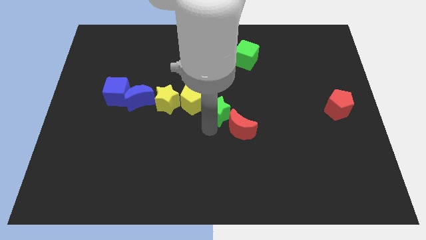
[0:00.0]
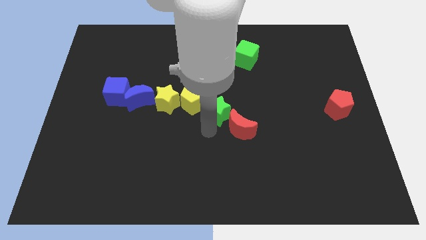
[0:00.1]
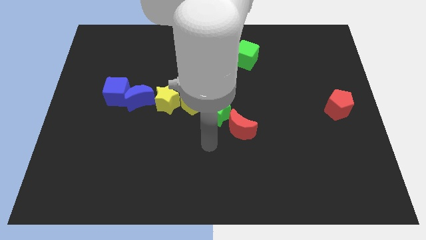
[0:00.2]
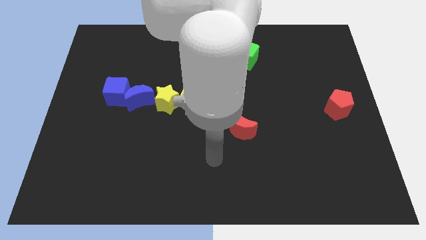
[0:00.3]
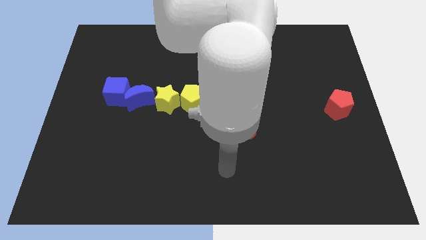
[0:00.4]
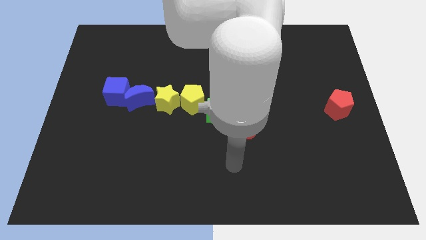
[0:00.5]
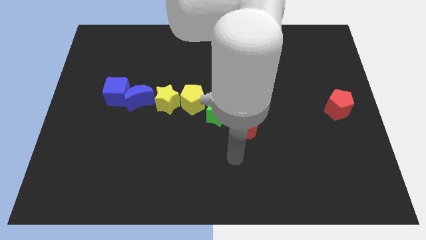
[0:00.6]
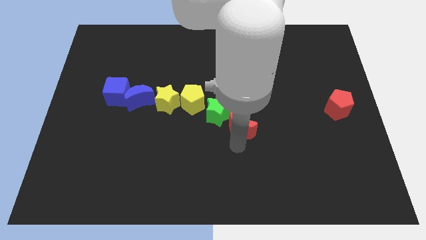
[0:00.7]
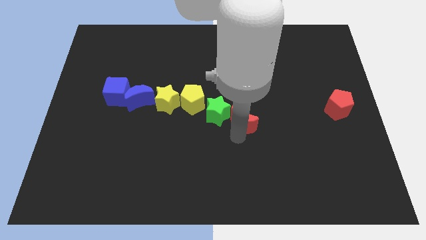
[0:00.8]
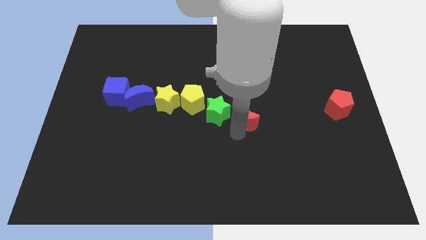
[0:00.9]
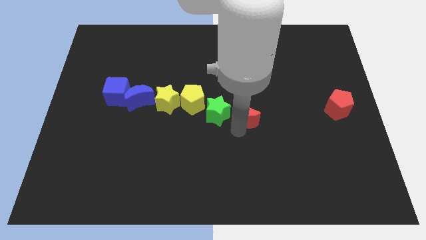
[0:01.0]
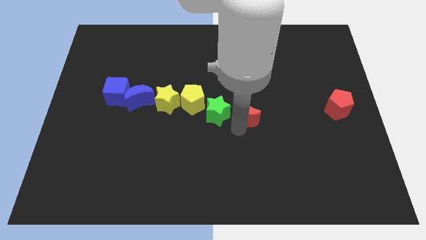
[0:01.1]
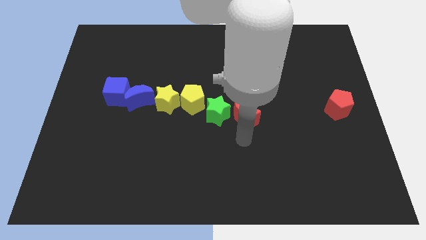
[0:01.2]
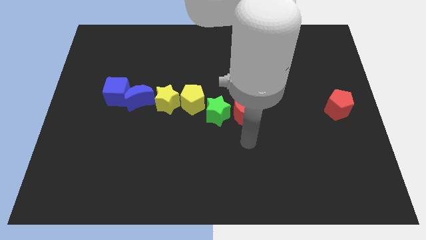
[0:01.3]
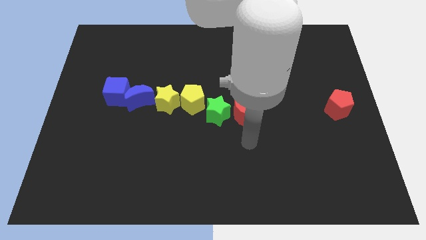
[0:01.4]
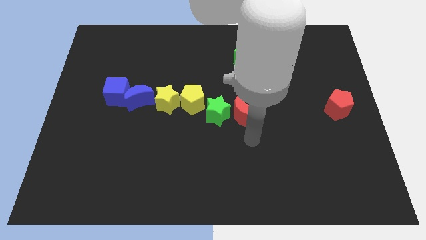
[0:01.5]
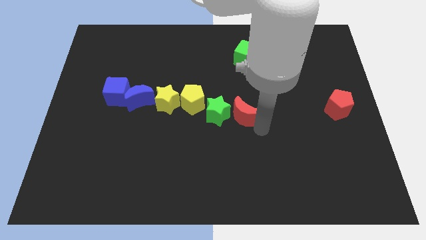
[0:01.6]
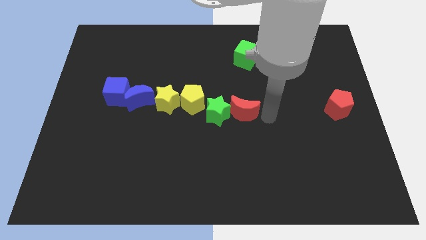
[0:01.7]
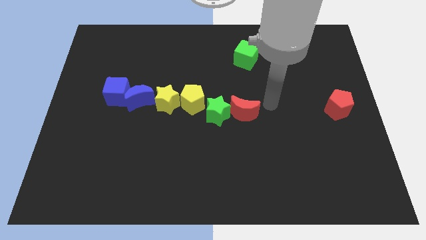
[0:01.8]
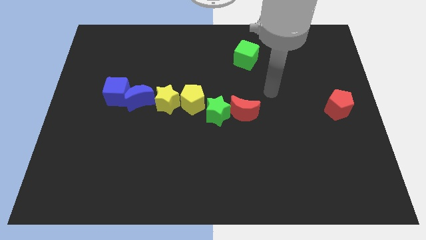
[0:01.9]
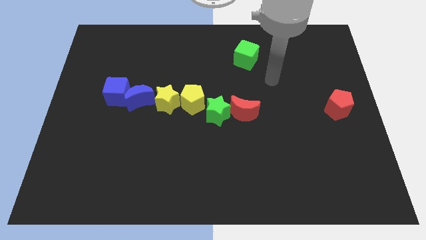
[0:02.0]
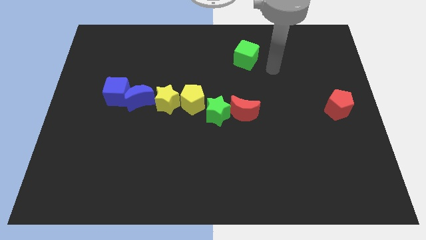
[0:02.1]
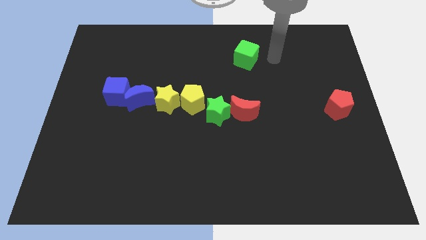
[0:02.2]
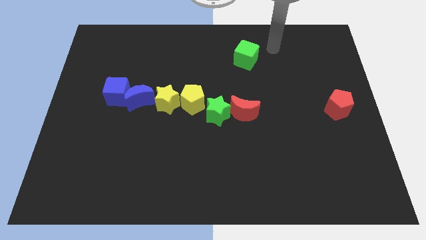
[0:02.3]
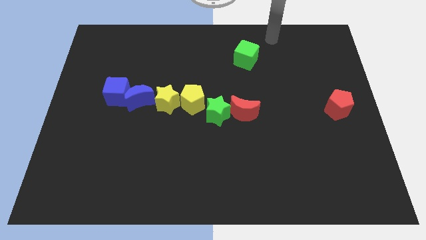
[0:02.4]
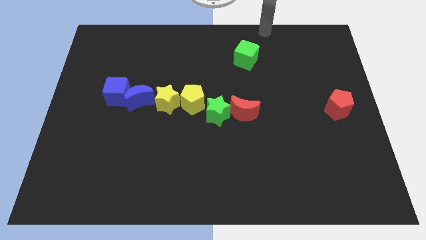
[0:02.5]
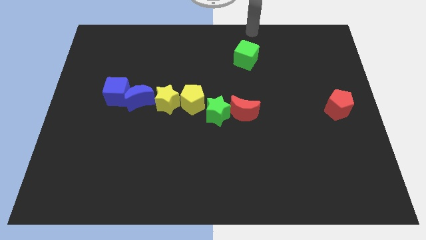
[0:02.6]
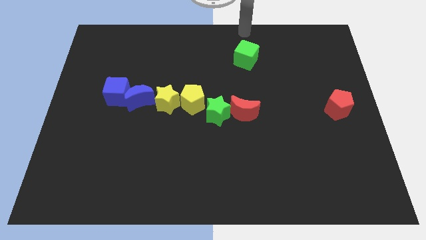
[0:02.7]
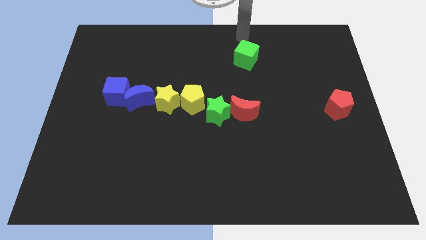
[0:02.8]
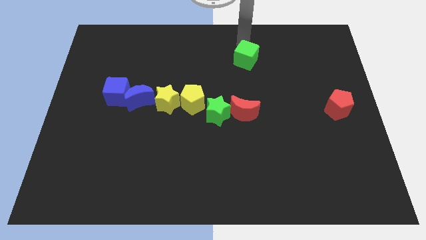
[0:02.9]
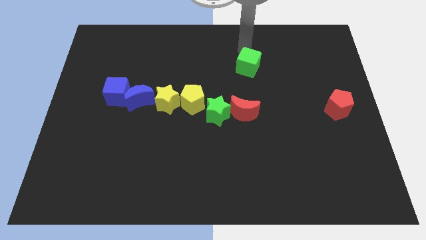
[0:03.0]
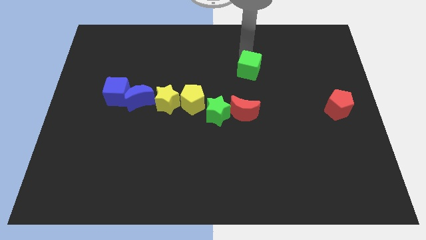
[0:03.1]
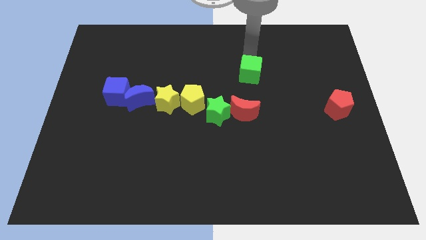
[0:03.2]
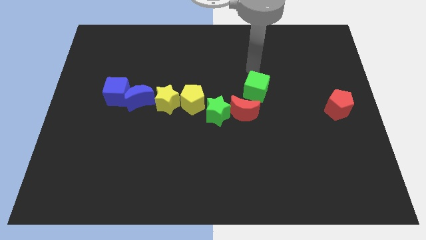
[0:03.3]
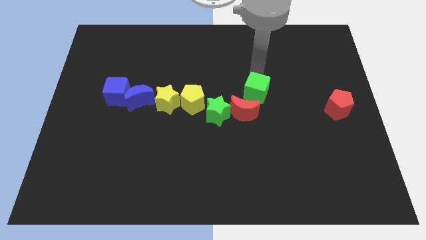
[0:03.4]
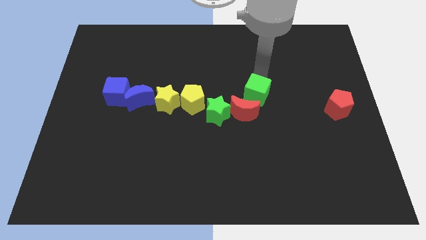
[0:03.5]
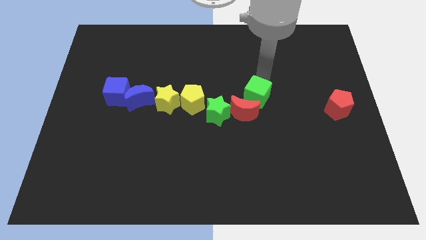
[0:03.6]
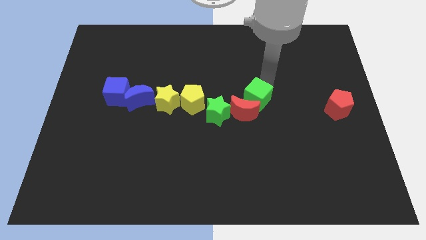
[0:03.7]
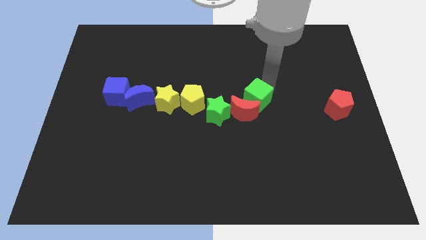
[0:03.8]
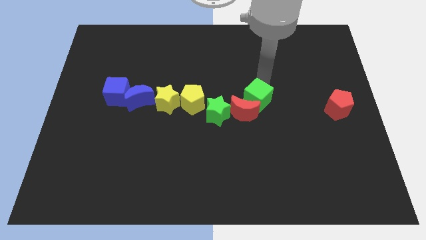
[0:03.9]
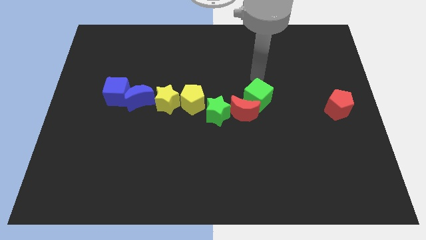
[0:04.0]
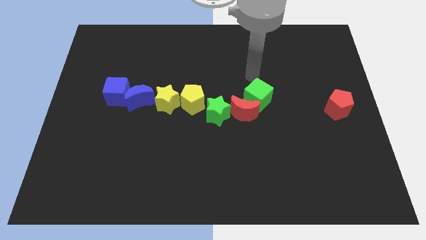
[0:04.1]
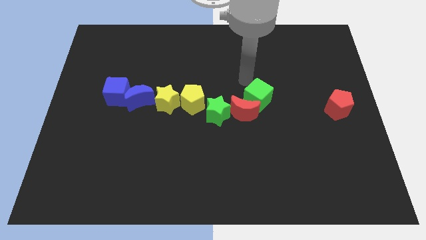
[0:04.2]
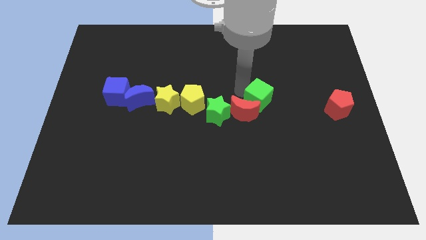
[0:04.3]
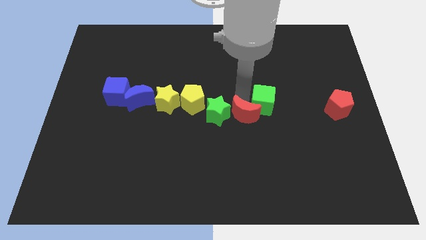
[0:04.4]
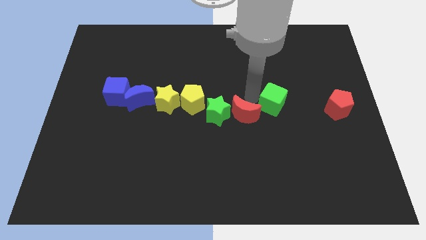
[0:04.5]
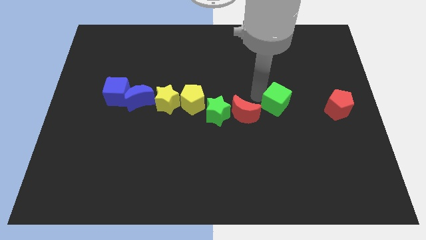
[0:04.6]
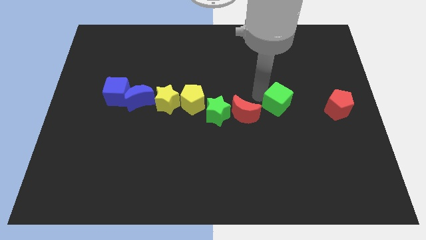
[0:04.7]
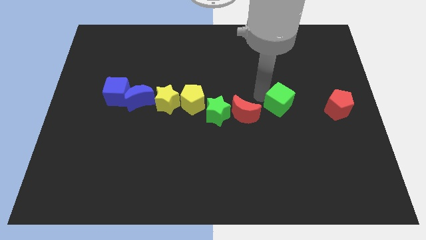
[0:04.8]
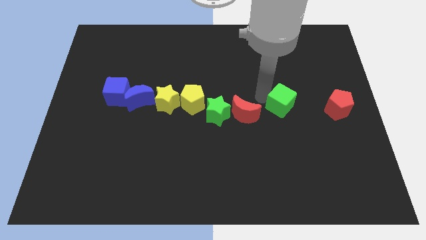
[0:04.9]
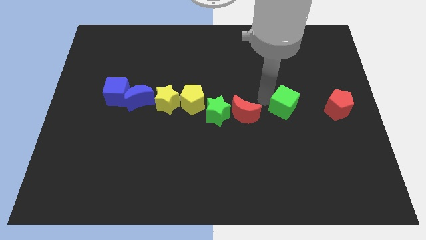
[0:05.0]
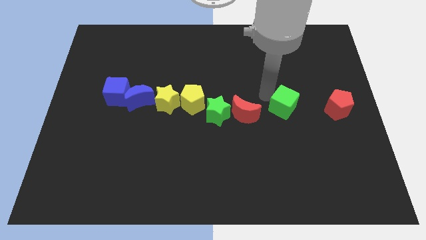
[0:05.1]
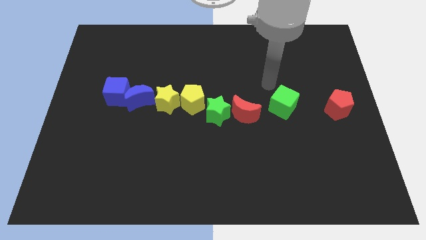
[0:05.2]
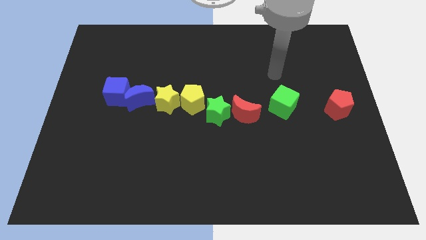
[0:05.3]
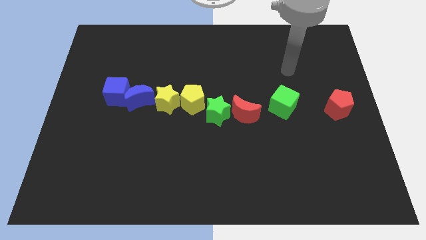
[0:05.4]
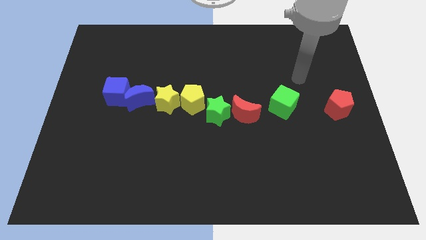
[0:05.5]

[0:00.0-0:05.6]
place the green cube in between the red pentagon and red moon

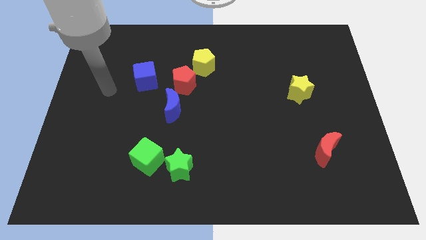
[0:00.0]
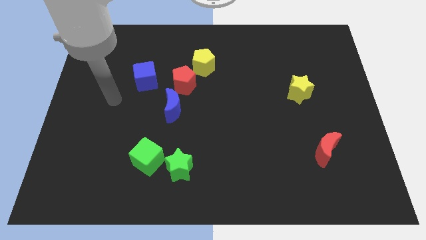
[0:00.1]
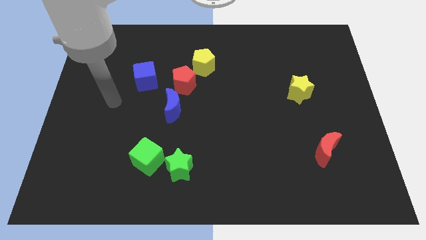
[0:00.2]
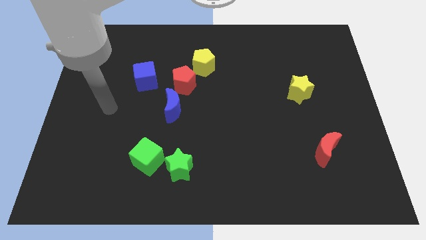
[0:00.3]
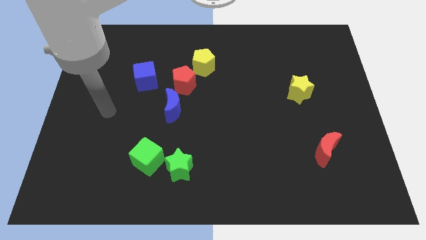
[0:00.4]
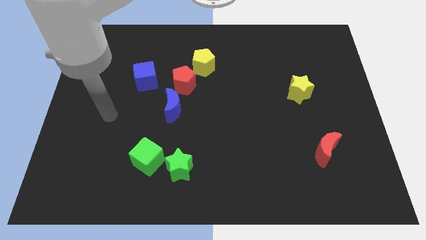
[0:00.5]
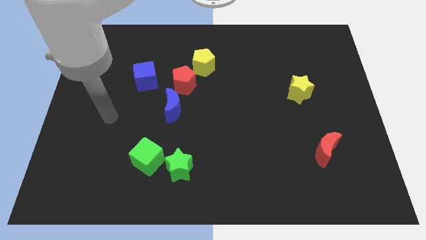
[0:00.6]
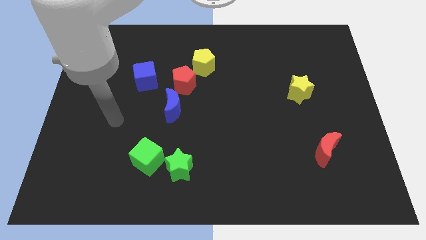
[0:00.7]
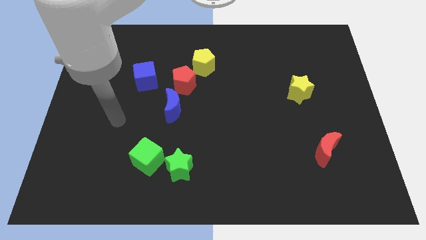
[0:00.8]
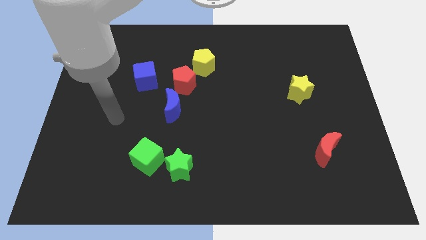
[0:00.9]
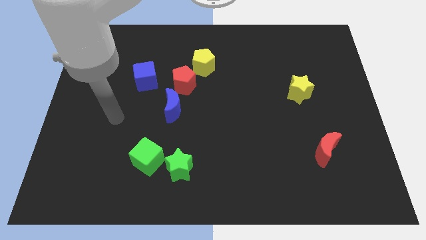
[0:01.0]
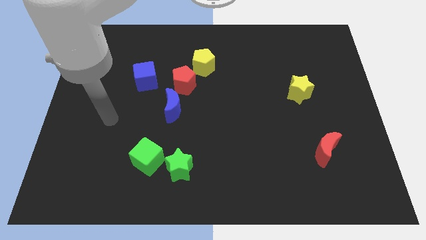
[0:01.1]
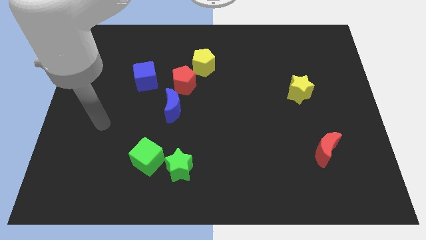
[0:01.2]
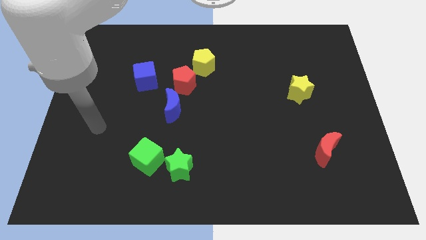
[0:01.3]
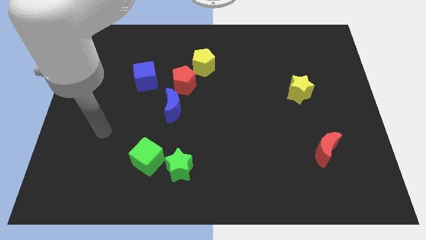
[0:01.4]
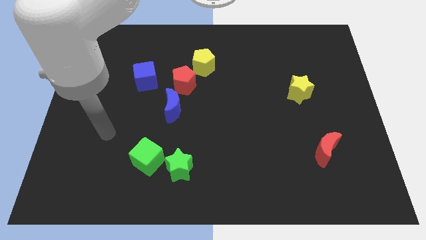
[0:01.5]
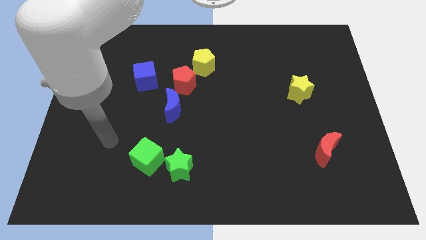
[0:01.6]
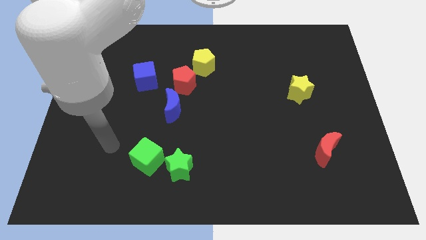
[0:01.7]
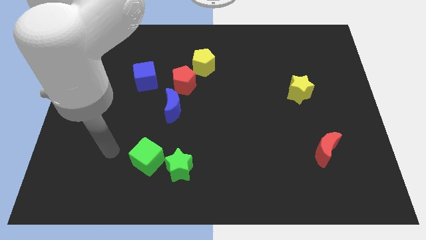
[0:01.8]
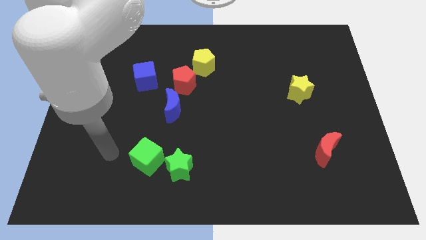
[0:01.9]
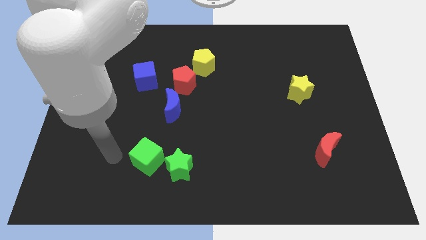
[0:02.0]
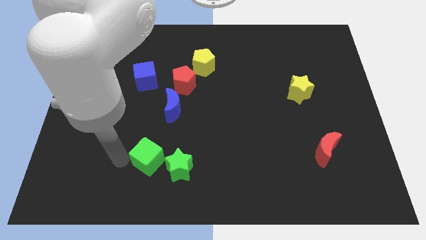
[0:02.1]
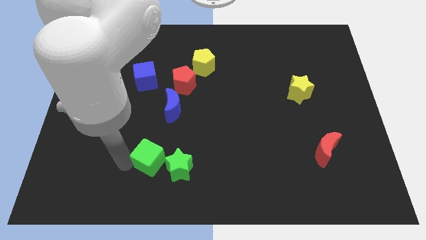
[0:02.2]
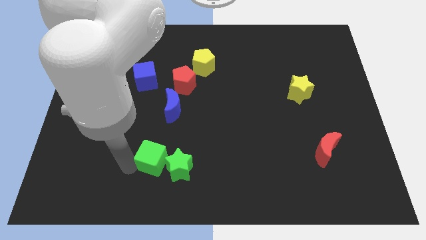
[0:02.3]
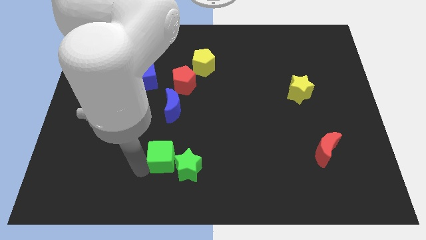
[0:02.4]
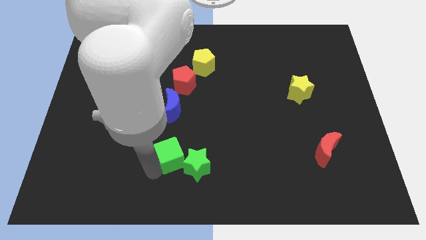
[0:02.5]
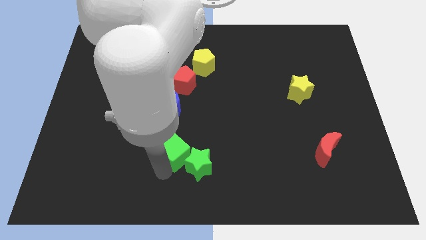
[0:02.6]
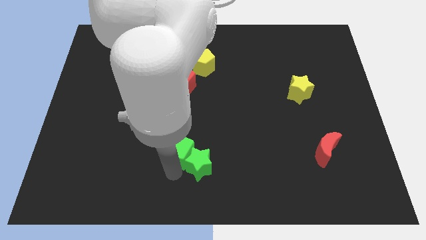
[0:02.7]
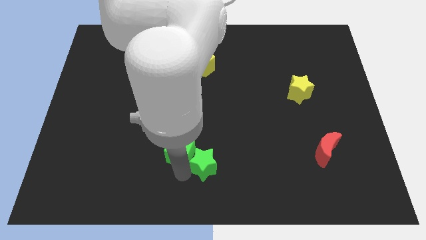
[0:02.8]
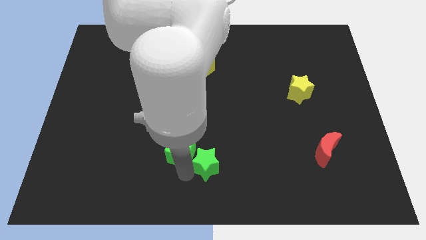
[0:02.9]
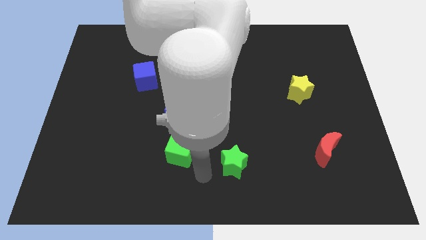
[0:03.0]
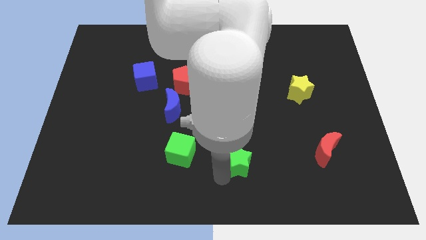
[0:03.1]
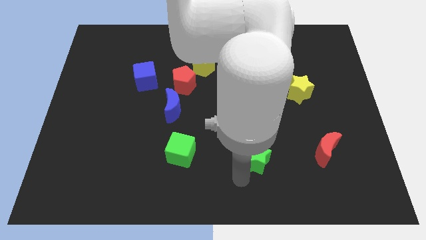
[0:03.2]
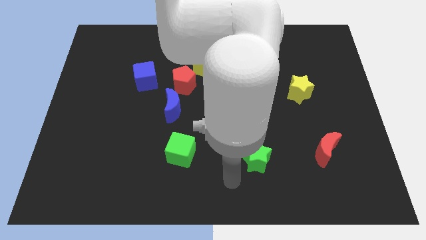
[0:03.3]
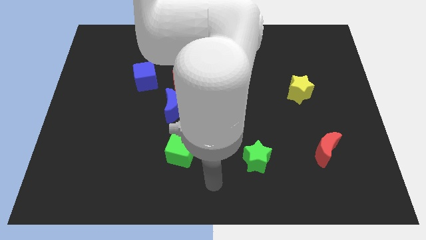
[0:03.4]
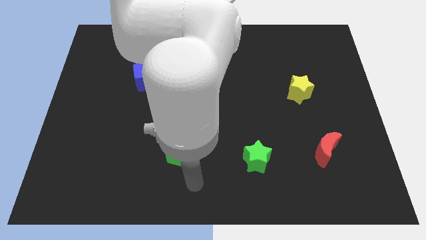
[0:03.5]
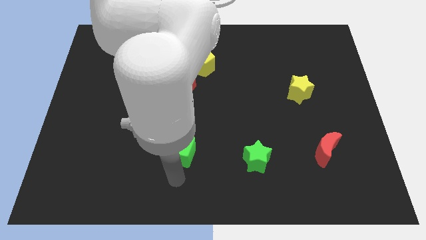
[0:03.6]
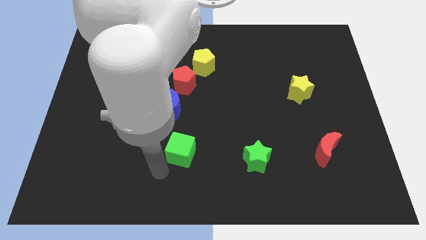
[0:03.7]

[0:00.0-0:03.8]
separate the green star and green cube
